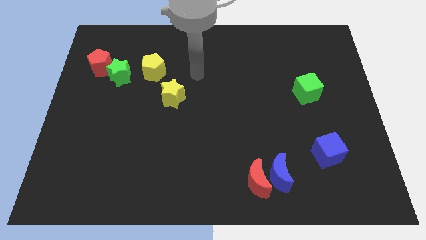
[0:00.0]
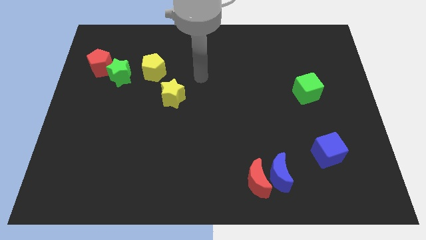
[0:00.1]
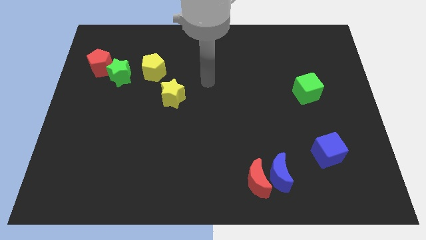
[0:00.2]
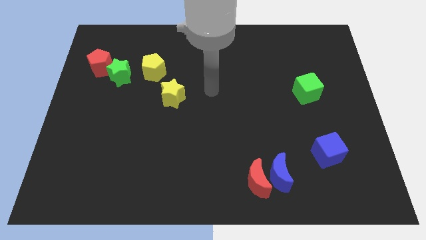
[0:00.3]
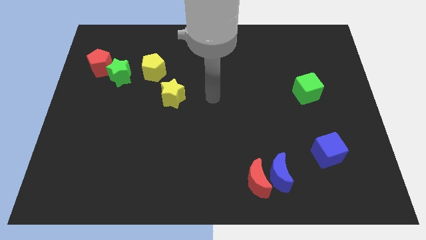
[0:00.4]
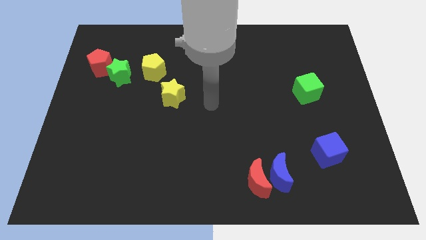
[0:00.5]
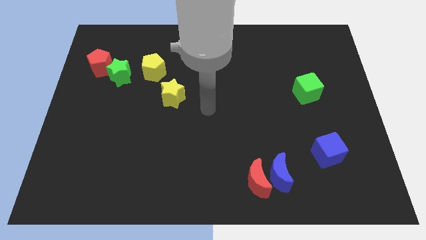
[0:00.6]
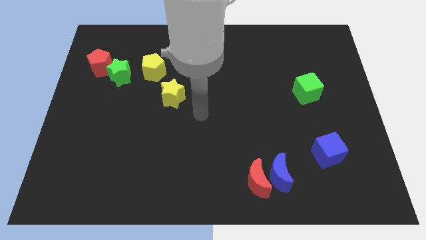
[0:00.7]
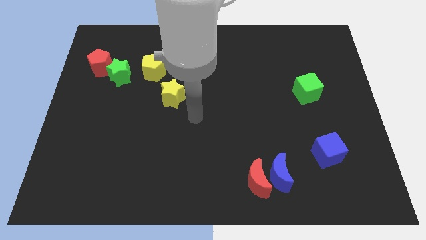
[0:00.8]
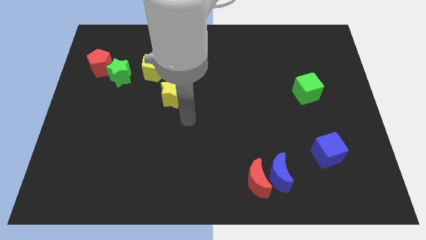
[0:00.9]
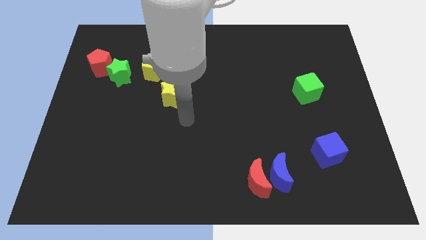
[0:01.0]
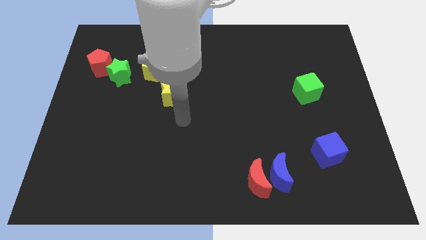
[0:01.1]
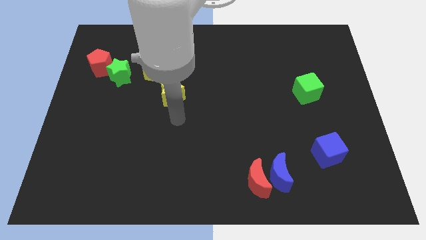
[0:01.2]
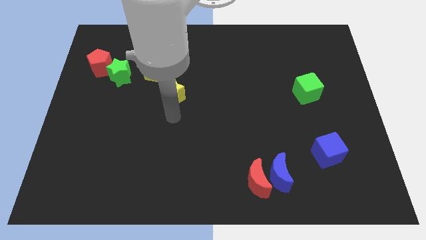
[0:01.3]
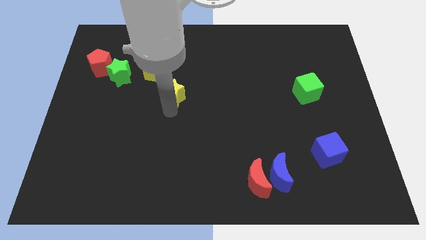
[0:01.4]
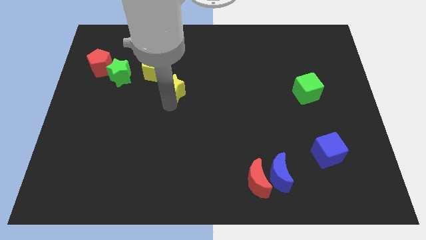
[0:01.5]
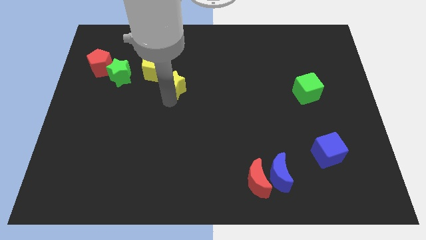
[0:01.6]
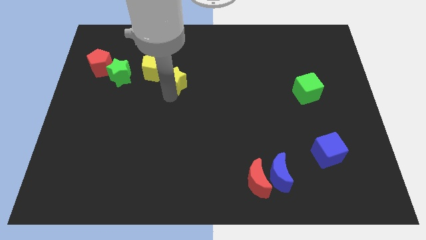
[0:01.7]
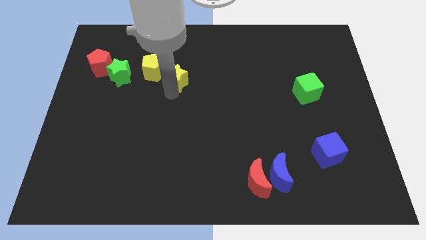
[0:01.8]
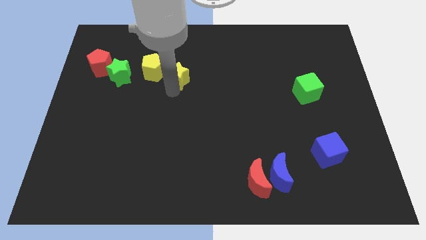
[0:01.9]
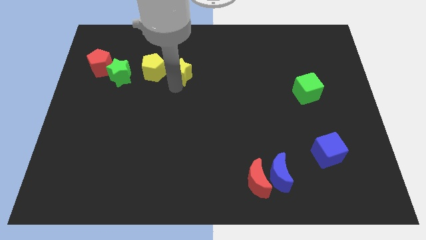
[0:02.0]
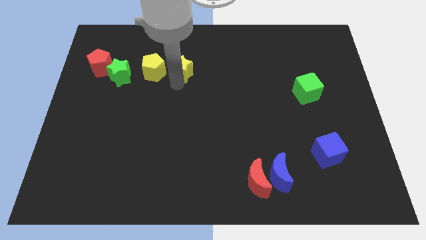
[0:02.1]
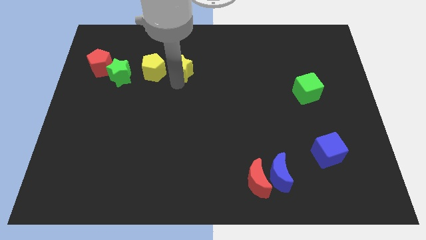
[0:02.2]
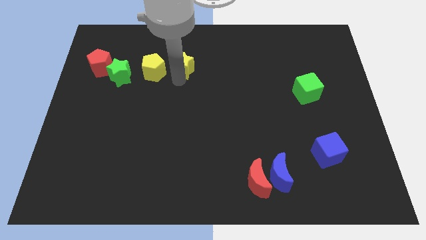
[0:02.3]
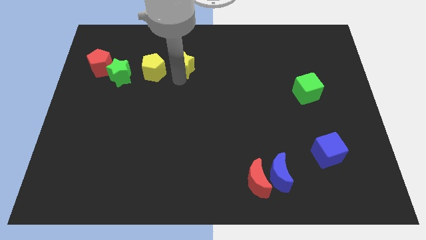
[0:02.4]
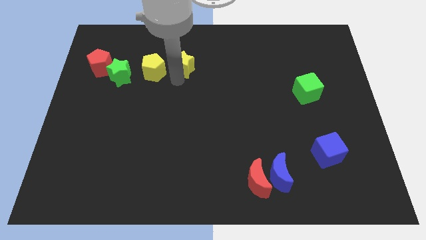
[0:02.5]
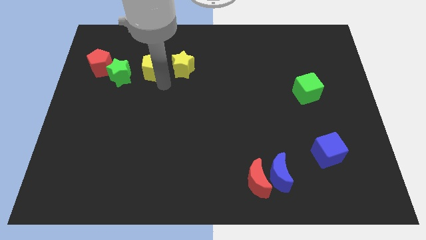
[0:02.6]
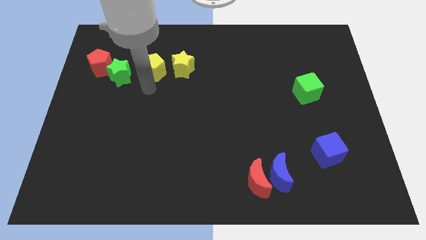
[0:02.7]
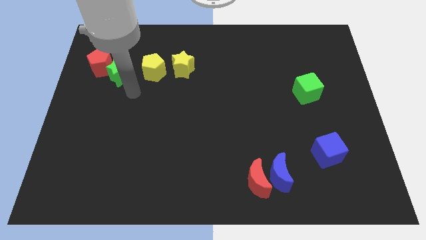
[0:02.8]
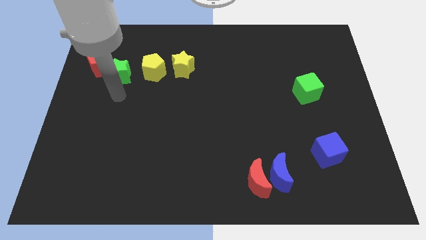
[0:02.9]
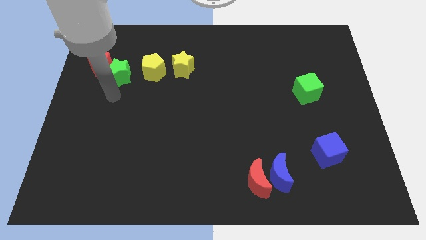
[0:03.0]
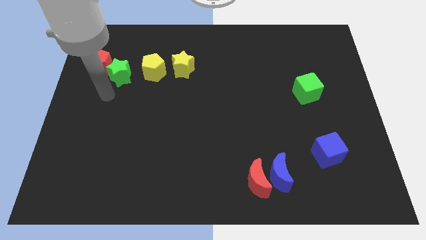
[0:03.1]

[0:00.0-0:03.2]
place yellow star beside yellow pentagon

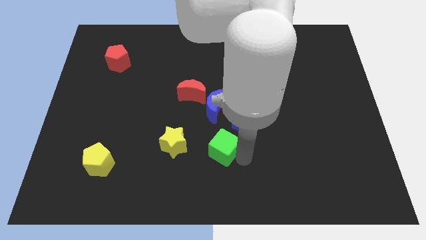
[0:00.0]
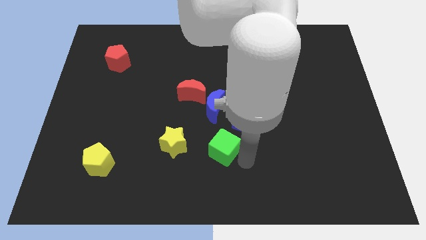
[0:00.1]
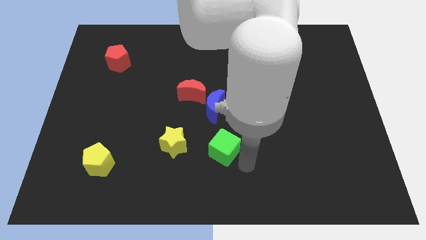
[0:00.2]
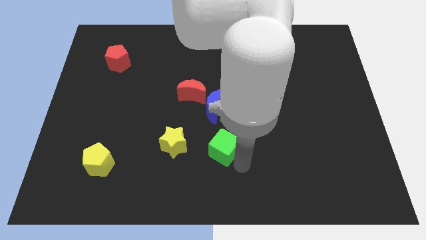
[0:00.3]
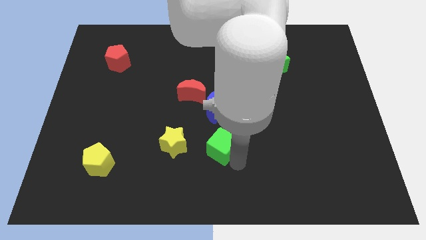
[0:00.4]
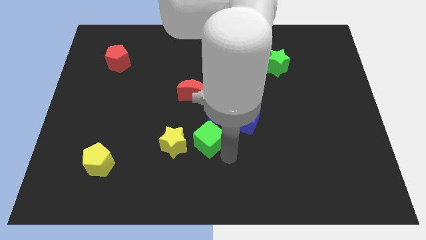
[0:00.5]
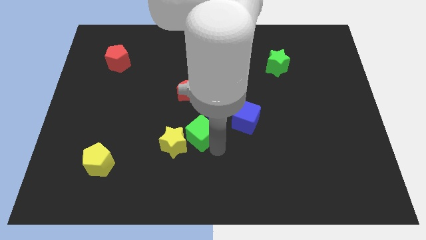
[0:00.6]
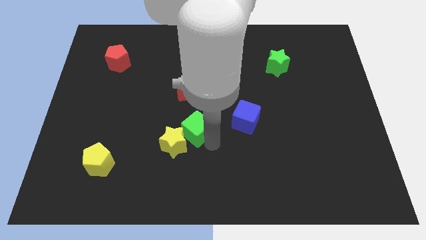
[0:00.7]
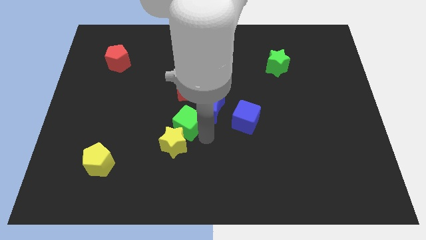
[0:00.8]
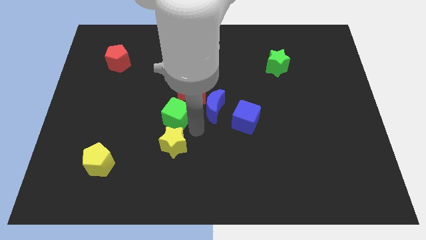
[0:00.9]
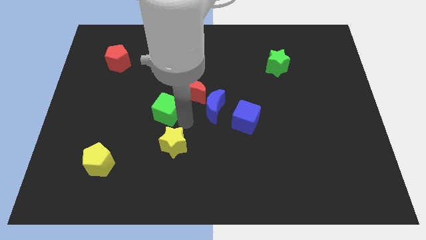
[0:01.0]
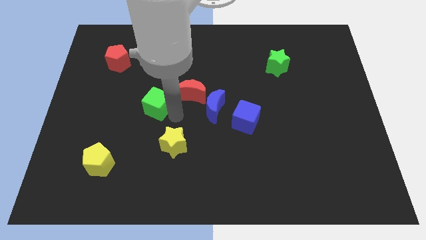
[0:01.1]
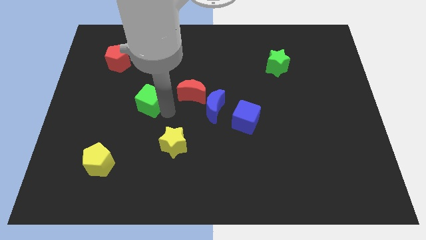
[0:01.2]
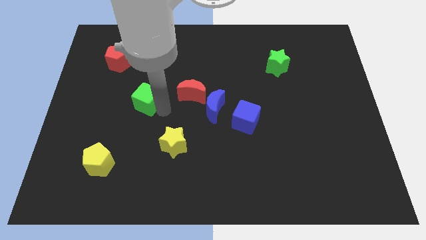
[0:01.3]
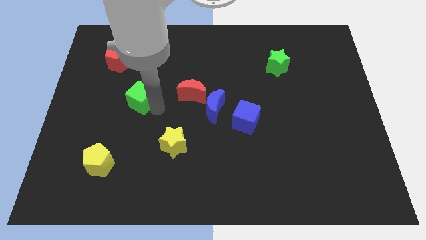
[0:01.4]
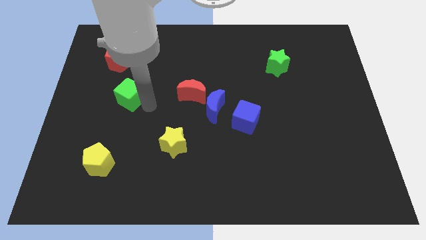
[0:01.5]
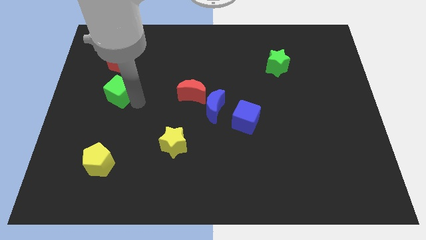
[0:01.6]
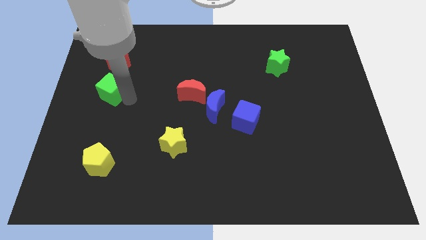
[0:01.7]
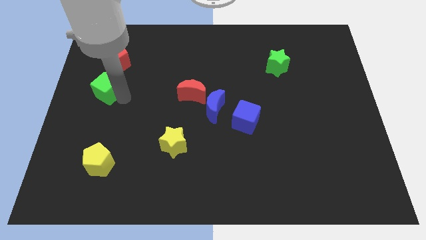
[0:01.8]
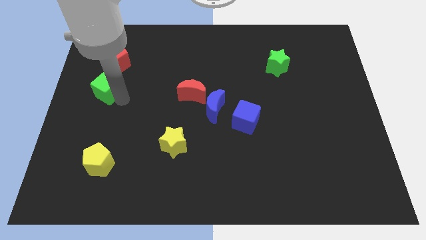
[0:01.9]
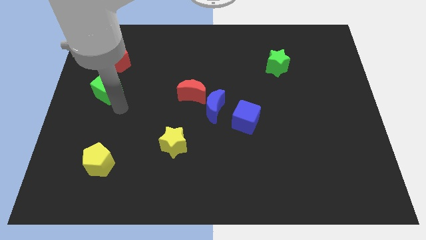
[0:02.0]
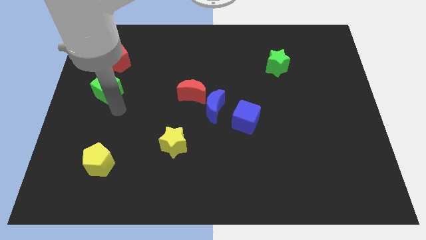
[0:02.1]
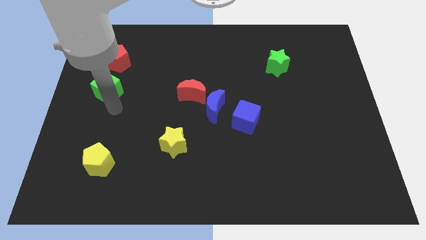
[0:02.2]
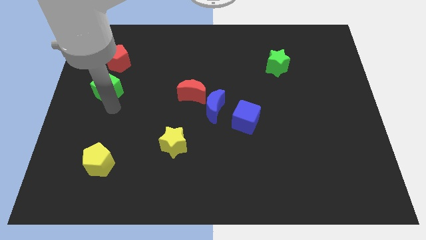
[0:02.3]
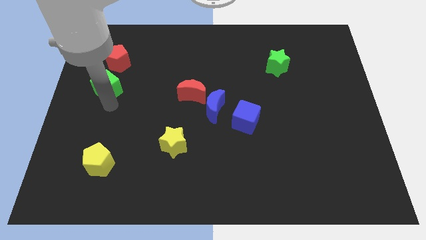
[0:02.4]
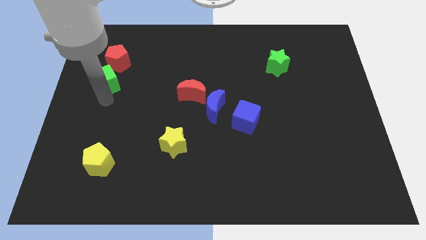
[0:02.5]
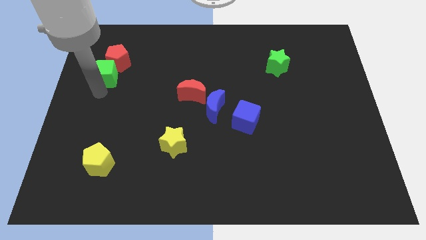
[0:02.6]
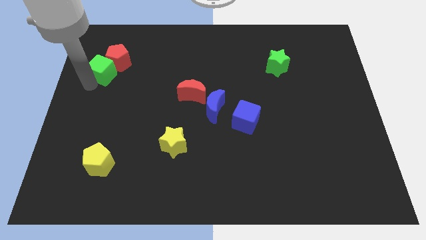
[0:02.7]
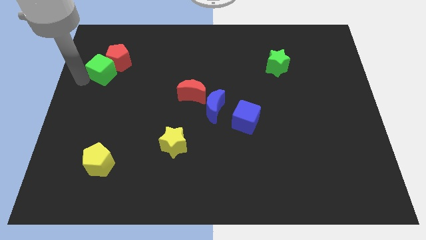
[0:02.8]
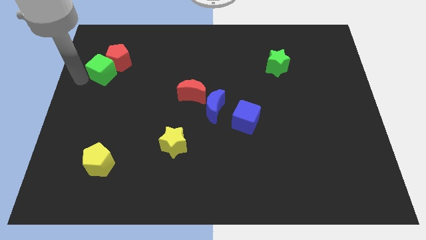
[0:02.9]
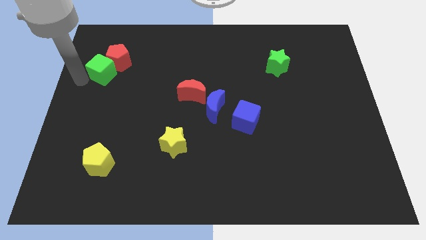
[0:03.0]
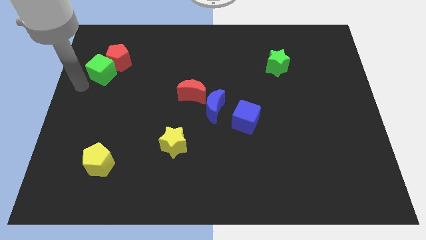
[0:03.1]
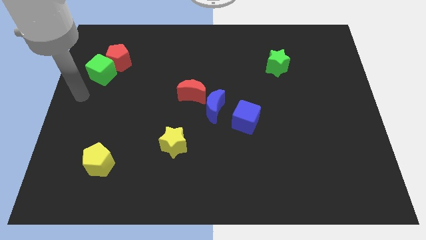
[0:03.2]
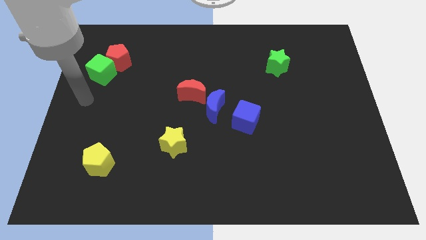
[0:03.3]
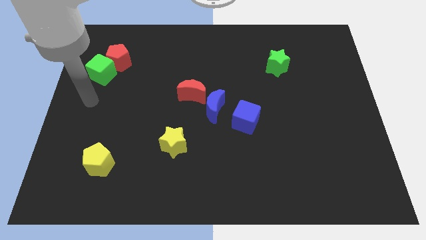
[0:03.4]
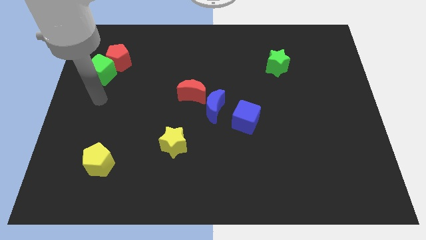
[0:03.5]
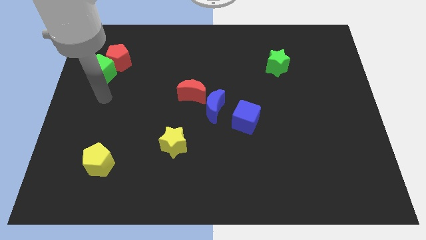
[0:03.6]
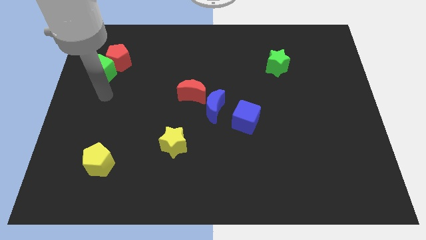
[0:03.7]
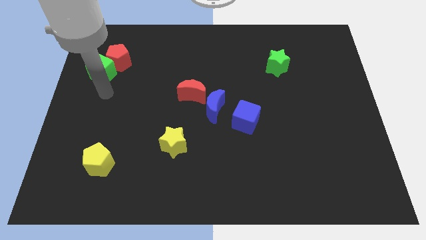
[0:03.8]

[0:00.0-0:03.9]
push the green cube into the red pentagon

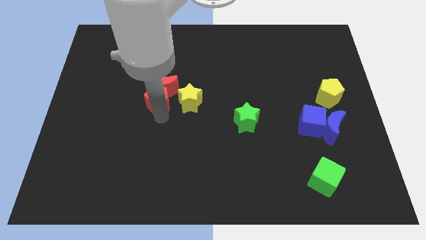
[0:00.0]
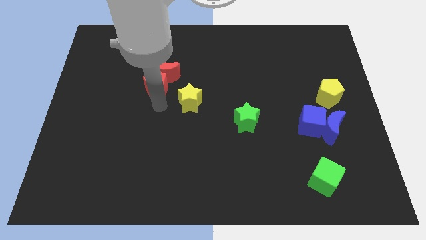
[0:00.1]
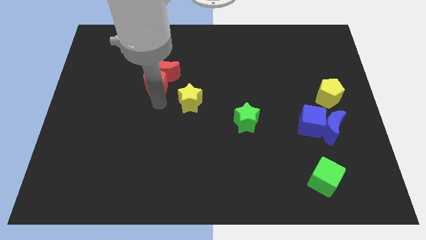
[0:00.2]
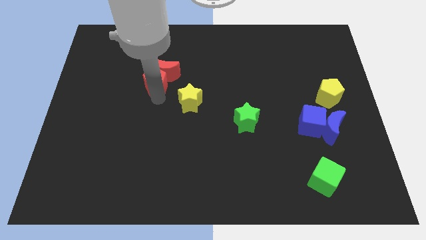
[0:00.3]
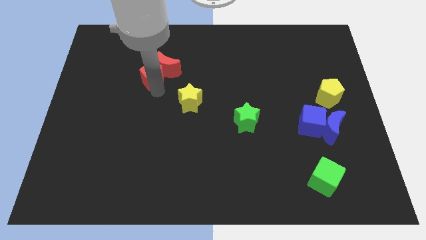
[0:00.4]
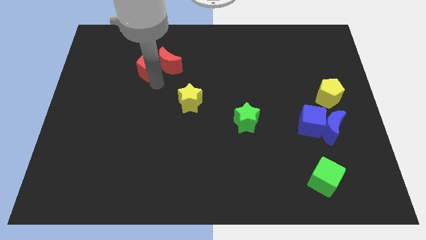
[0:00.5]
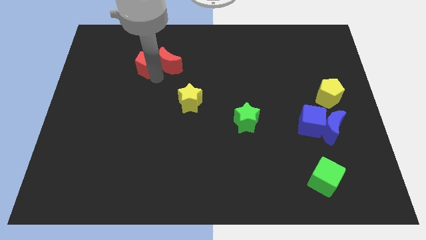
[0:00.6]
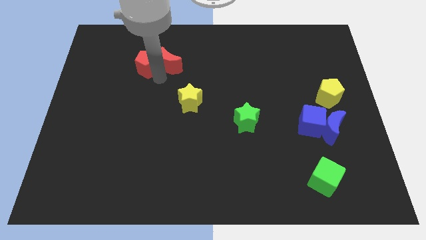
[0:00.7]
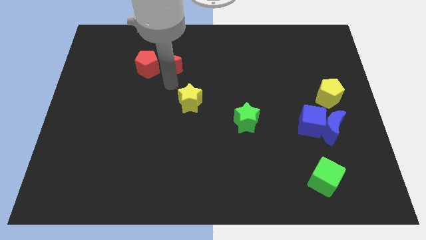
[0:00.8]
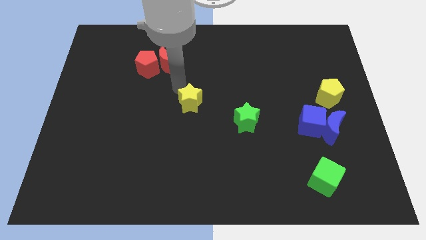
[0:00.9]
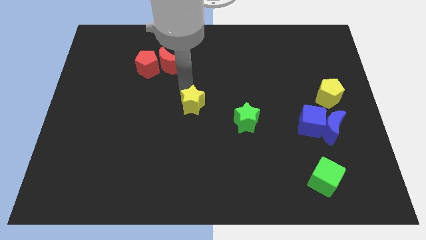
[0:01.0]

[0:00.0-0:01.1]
move the red pentagon and red crescent to top of the board

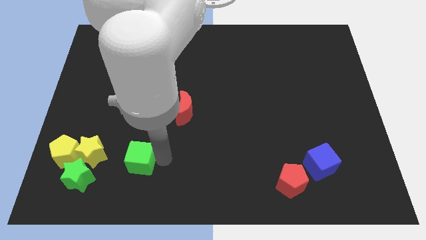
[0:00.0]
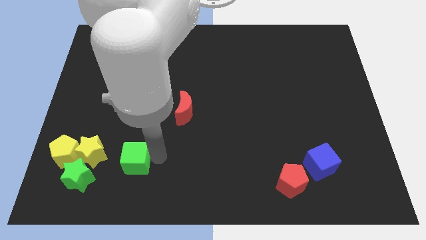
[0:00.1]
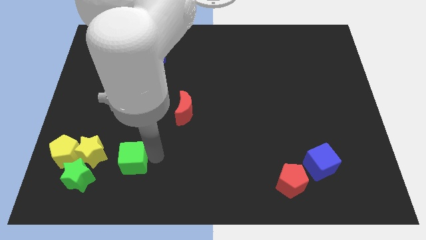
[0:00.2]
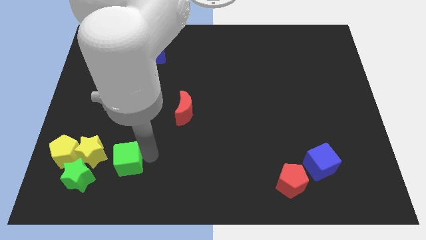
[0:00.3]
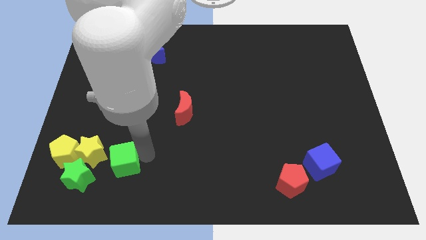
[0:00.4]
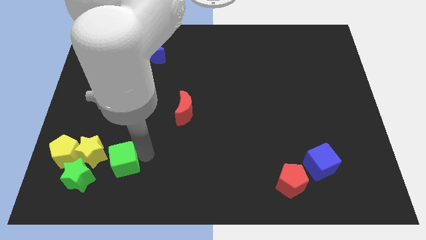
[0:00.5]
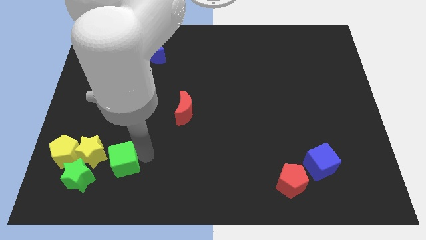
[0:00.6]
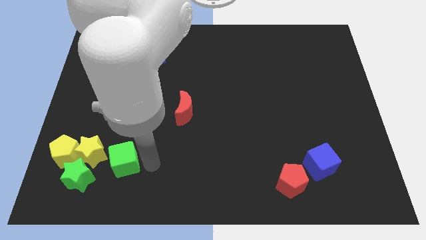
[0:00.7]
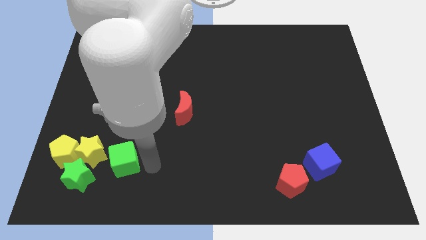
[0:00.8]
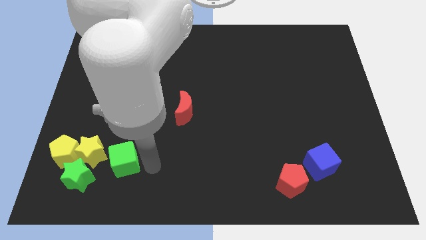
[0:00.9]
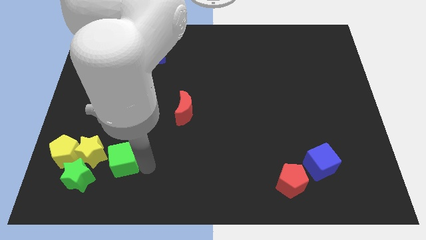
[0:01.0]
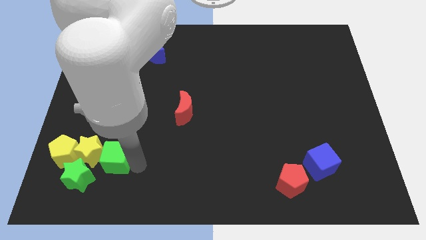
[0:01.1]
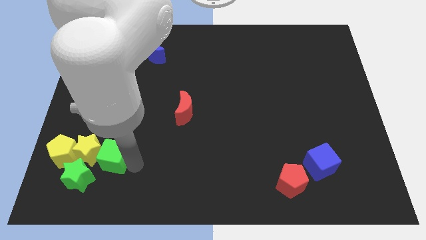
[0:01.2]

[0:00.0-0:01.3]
move the green cube to the right of the yellow star
